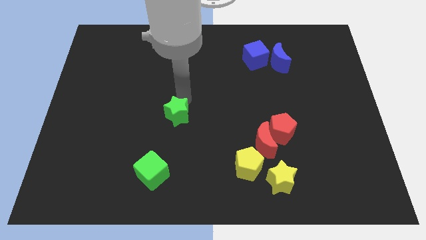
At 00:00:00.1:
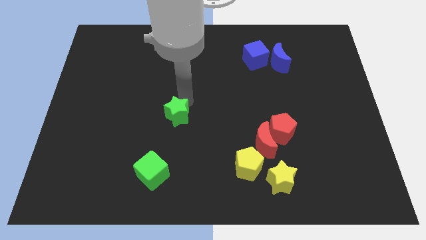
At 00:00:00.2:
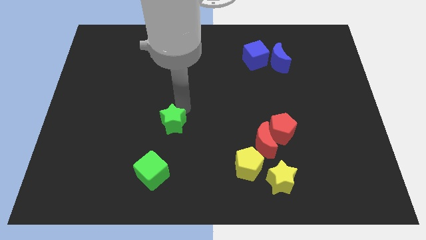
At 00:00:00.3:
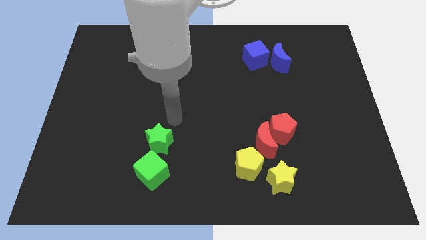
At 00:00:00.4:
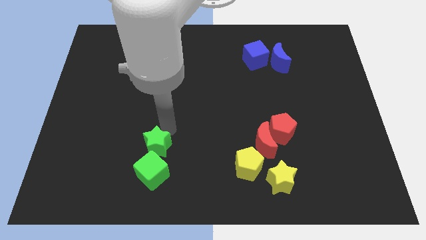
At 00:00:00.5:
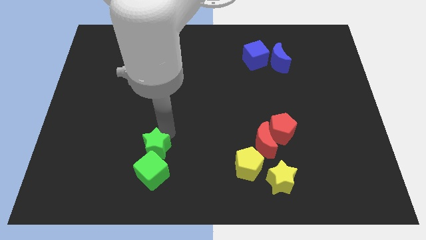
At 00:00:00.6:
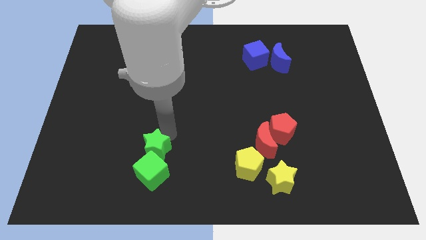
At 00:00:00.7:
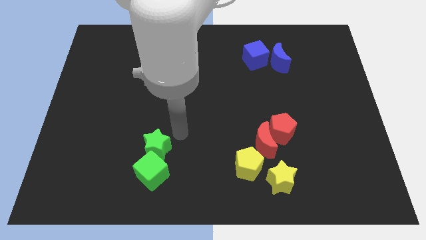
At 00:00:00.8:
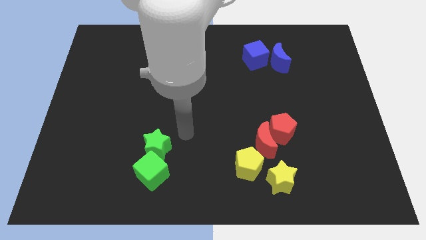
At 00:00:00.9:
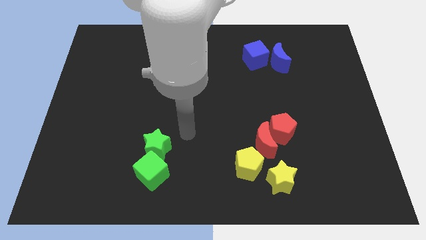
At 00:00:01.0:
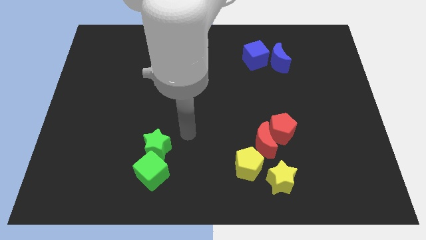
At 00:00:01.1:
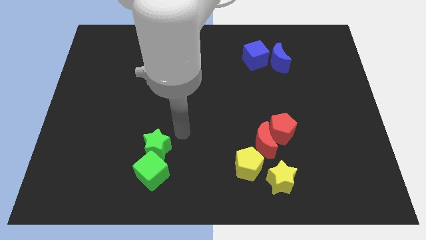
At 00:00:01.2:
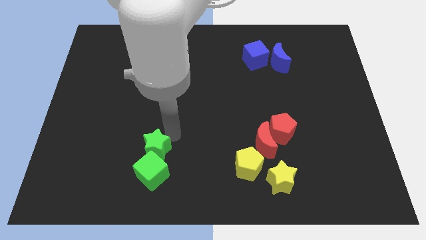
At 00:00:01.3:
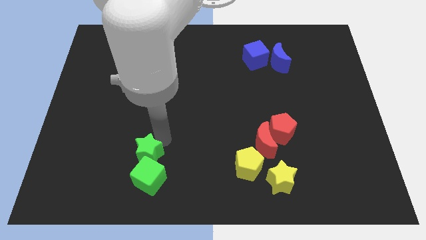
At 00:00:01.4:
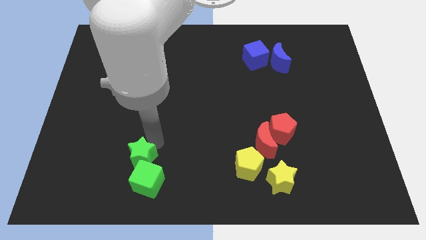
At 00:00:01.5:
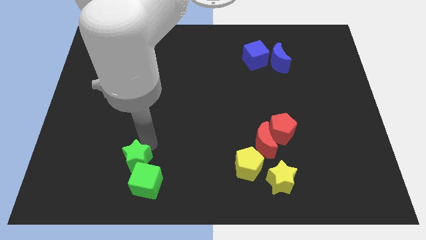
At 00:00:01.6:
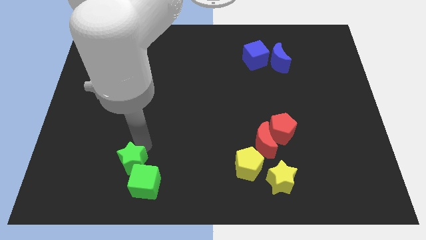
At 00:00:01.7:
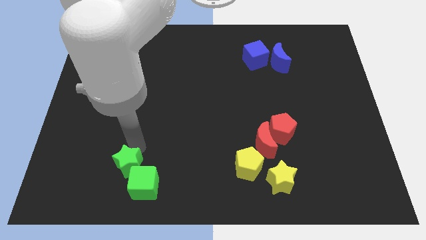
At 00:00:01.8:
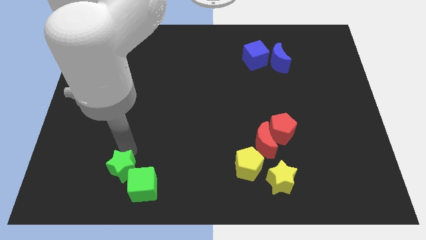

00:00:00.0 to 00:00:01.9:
push the green star into the green cube

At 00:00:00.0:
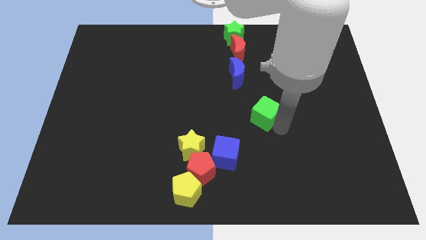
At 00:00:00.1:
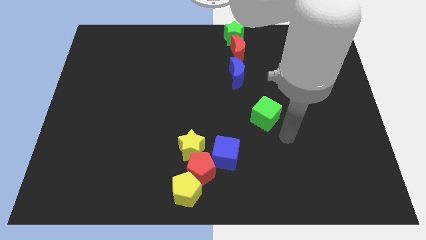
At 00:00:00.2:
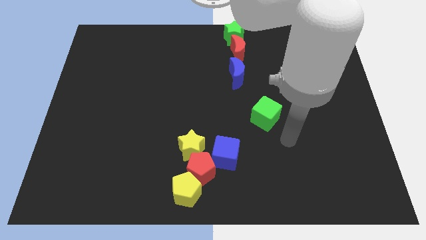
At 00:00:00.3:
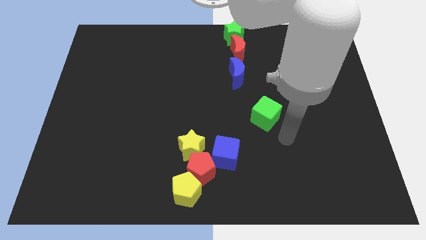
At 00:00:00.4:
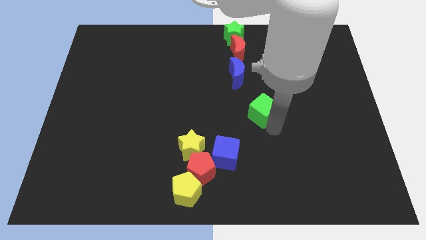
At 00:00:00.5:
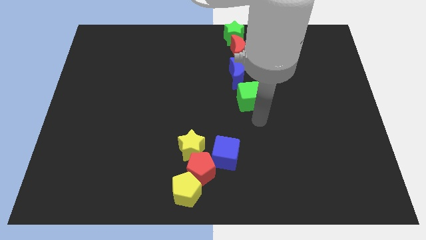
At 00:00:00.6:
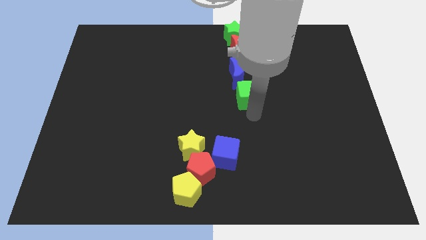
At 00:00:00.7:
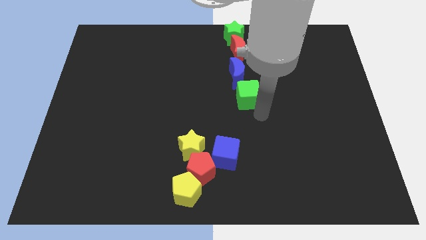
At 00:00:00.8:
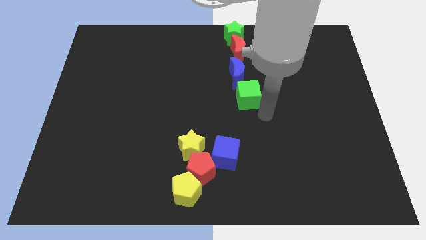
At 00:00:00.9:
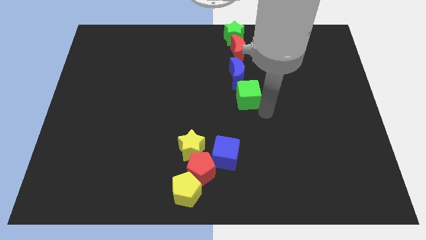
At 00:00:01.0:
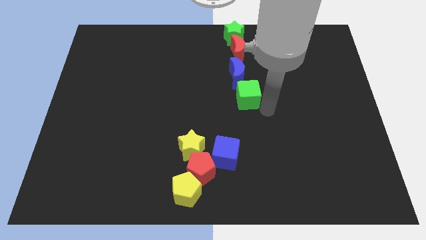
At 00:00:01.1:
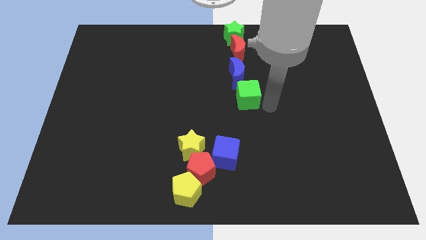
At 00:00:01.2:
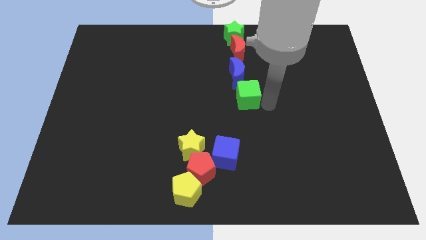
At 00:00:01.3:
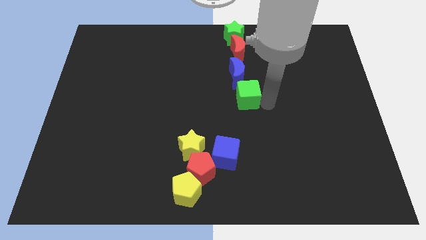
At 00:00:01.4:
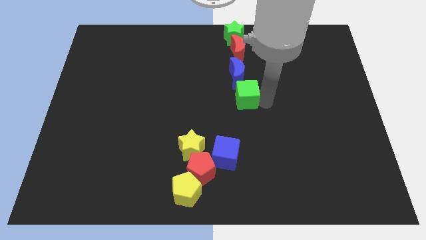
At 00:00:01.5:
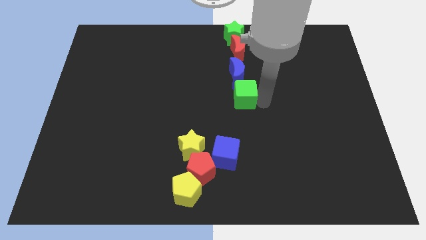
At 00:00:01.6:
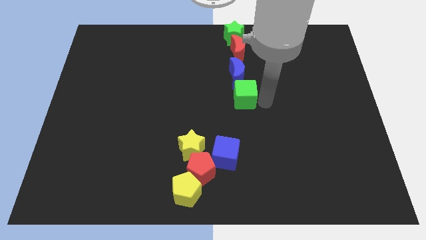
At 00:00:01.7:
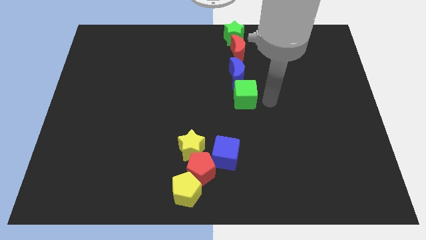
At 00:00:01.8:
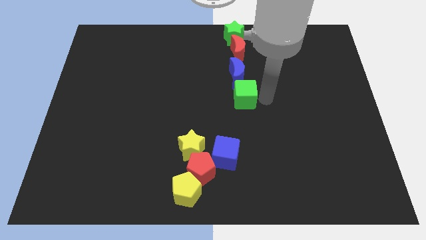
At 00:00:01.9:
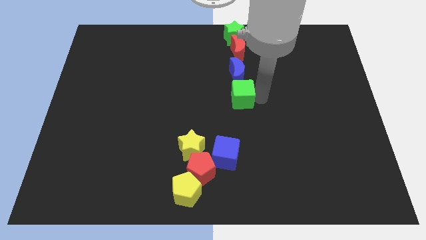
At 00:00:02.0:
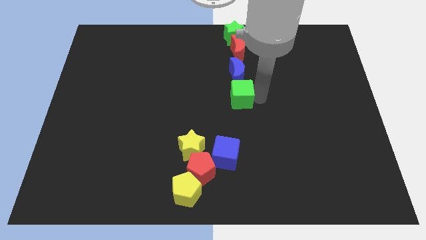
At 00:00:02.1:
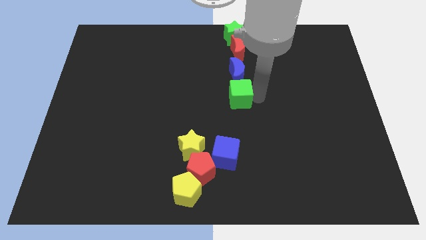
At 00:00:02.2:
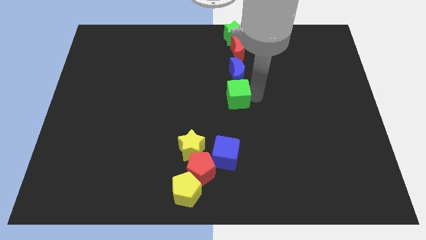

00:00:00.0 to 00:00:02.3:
push the green cube below blue crescent

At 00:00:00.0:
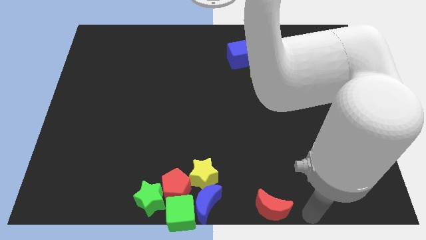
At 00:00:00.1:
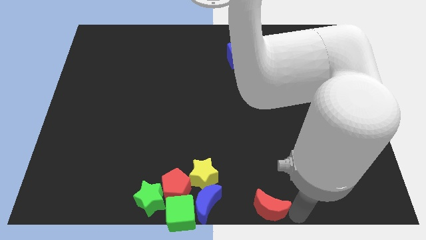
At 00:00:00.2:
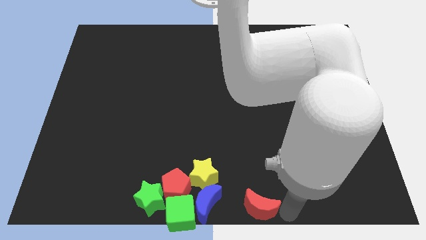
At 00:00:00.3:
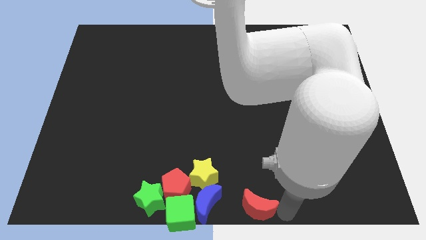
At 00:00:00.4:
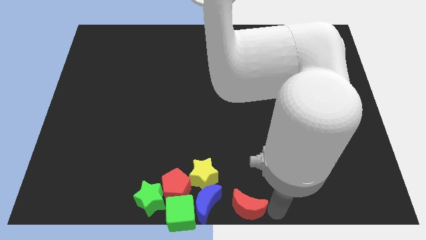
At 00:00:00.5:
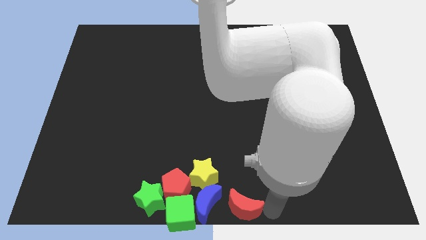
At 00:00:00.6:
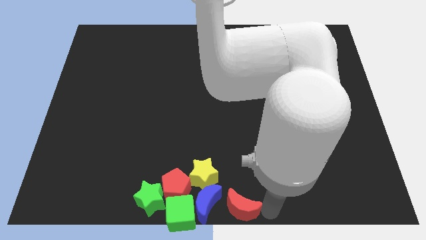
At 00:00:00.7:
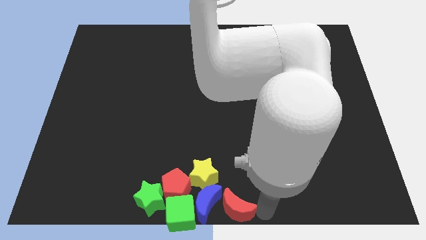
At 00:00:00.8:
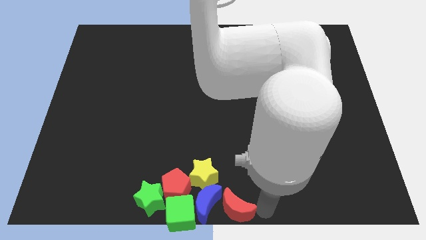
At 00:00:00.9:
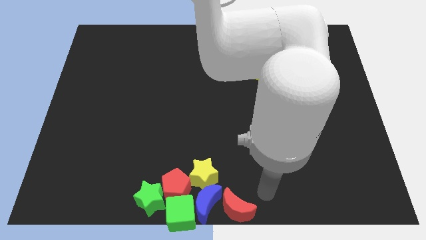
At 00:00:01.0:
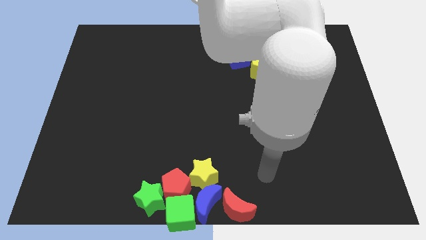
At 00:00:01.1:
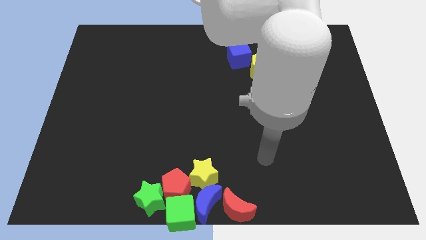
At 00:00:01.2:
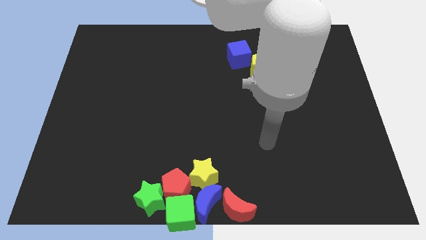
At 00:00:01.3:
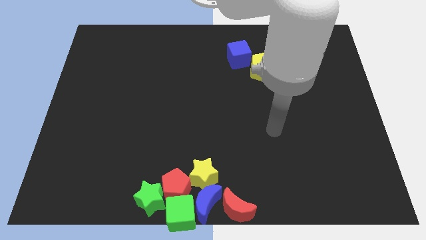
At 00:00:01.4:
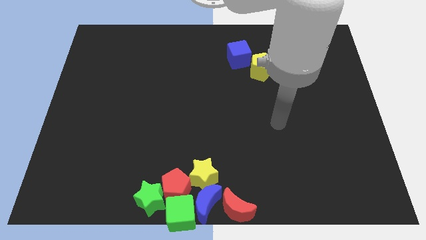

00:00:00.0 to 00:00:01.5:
place red crescent to the right of blue crescent

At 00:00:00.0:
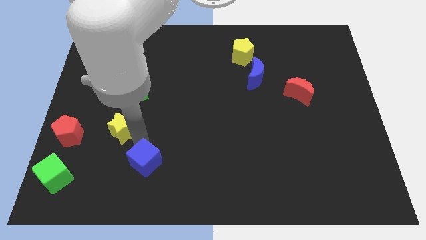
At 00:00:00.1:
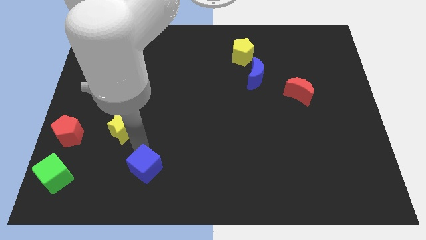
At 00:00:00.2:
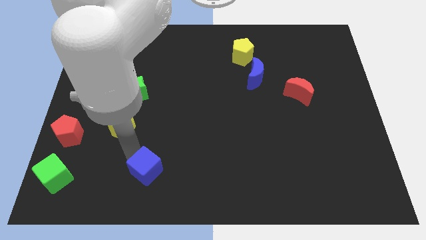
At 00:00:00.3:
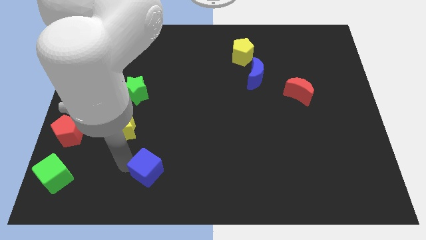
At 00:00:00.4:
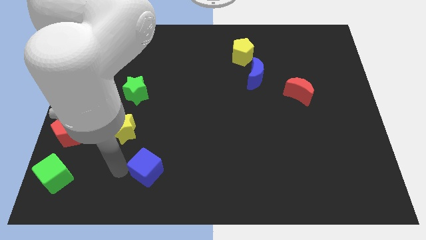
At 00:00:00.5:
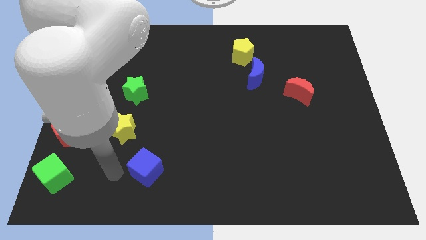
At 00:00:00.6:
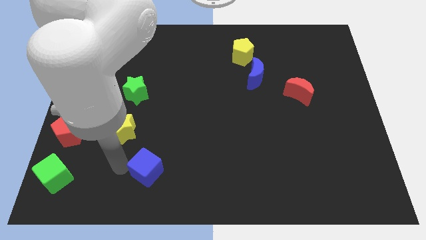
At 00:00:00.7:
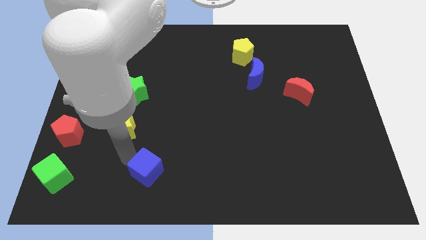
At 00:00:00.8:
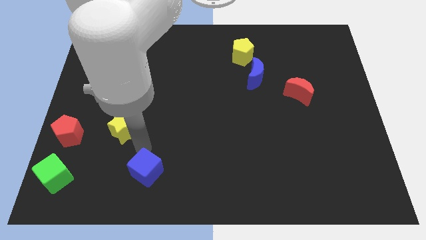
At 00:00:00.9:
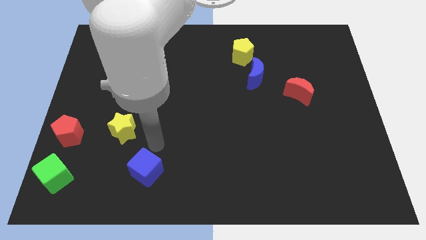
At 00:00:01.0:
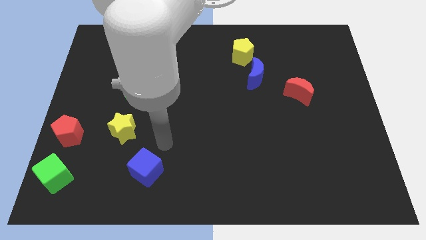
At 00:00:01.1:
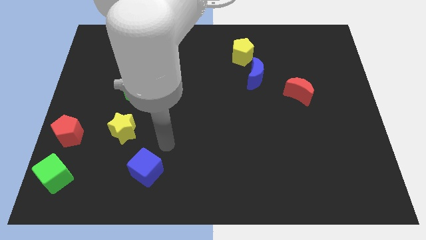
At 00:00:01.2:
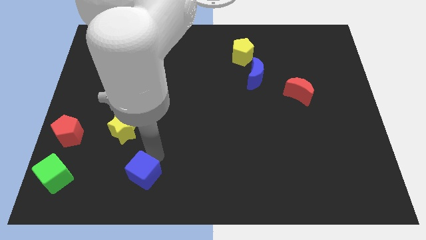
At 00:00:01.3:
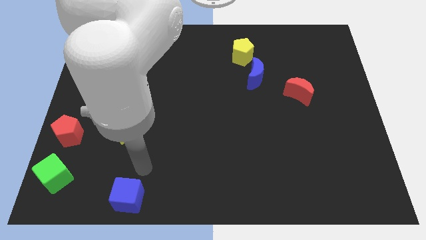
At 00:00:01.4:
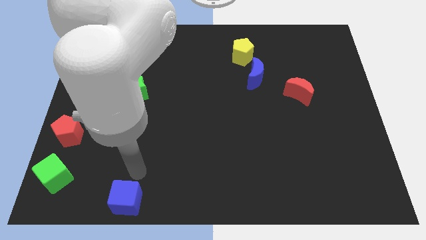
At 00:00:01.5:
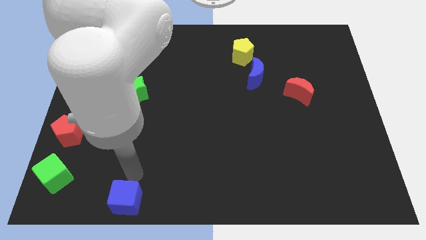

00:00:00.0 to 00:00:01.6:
push the blue cube slightly to the bottom

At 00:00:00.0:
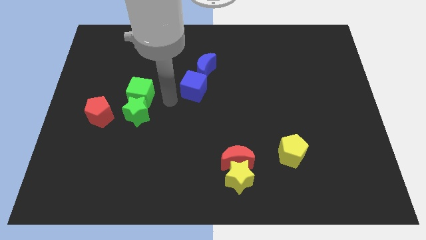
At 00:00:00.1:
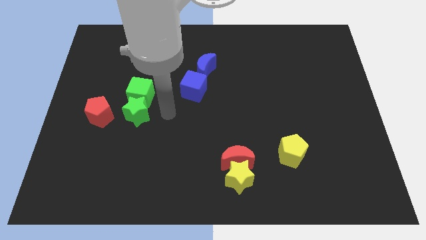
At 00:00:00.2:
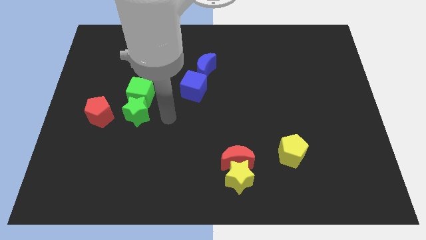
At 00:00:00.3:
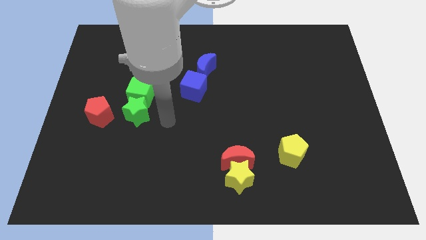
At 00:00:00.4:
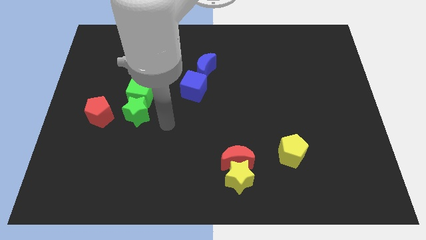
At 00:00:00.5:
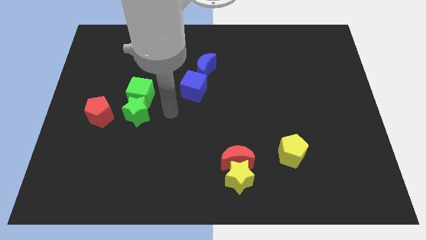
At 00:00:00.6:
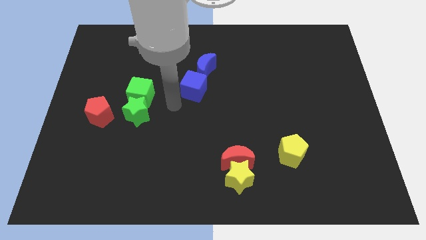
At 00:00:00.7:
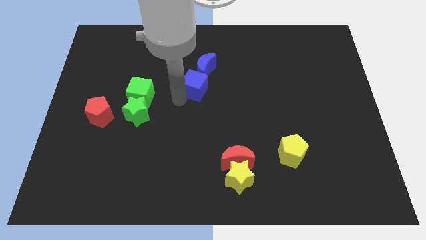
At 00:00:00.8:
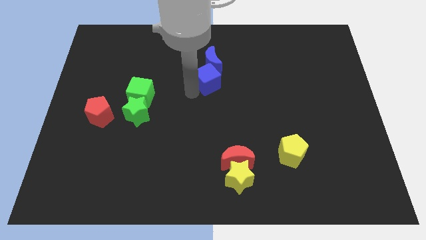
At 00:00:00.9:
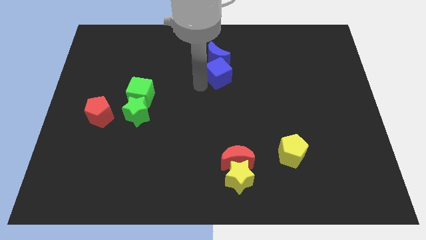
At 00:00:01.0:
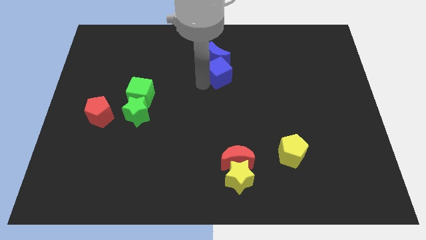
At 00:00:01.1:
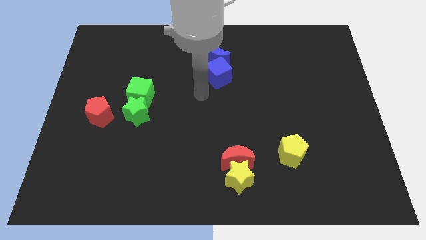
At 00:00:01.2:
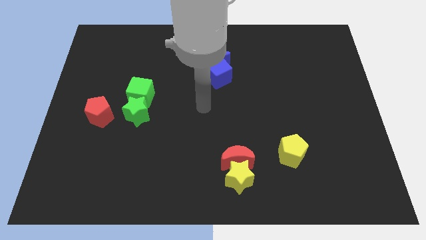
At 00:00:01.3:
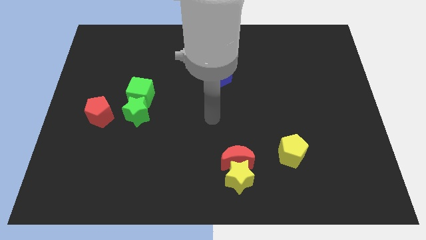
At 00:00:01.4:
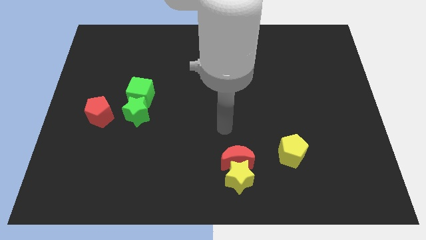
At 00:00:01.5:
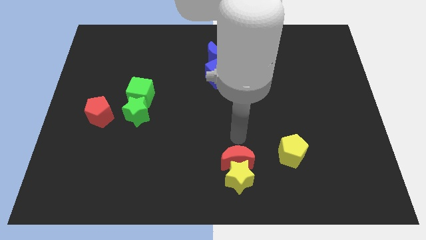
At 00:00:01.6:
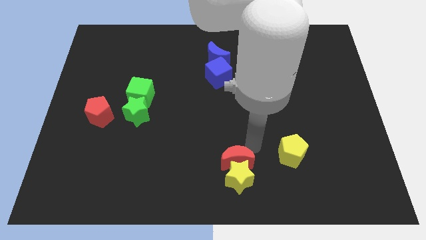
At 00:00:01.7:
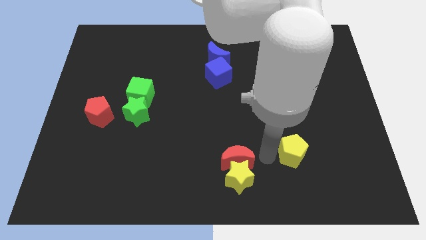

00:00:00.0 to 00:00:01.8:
place the blue cube to the bottom of the blue moon
